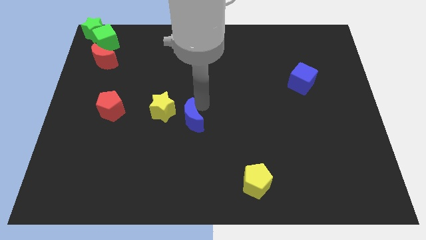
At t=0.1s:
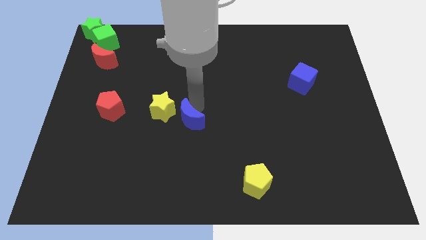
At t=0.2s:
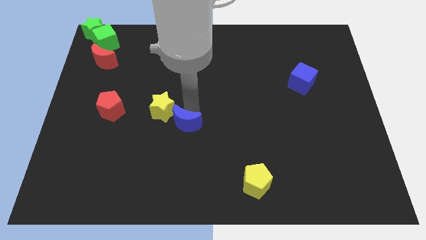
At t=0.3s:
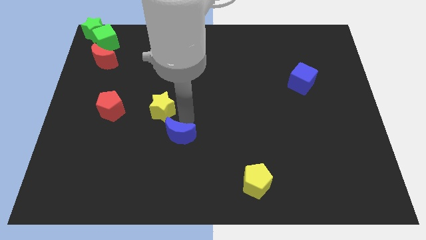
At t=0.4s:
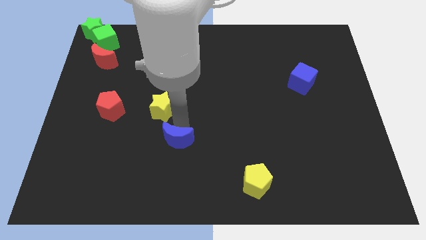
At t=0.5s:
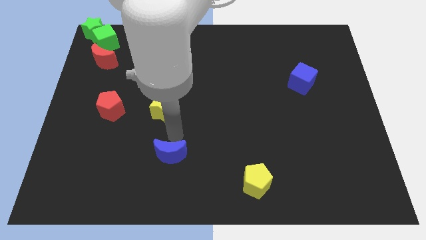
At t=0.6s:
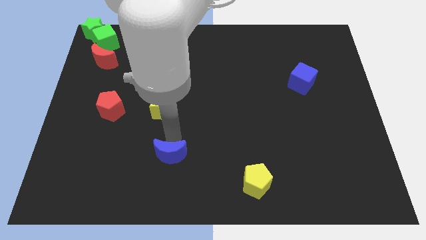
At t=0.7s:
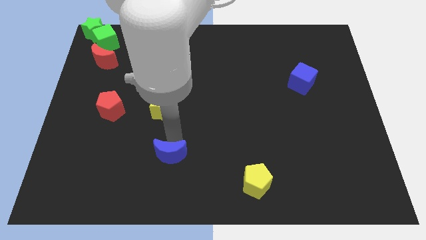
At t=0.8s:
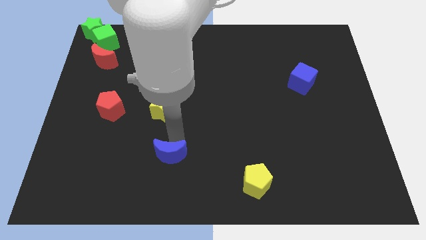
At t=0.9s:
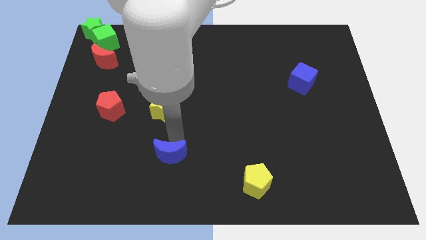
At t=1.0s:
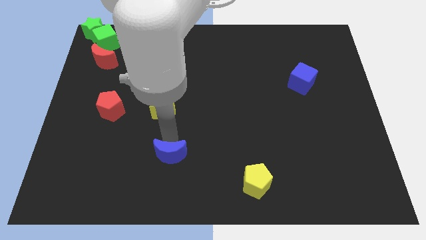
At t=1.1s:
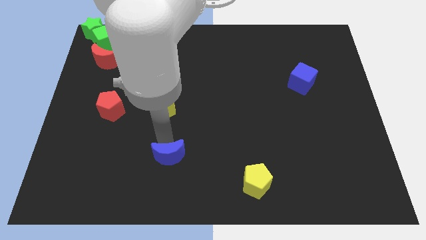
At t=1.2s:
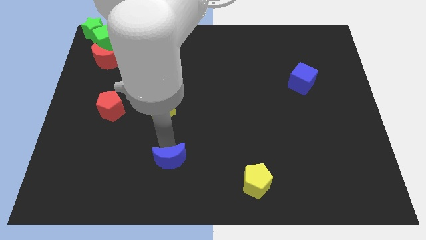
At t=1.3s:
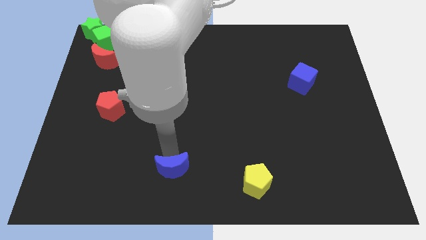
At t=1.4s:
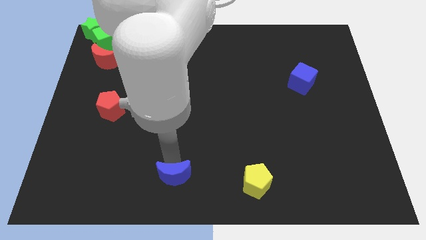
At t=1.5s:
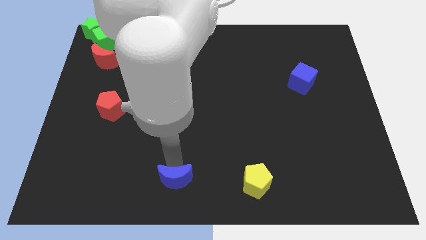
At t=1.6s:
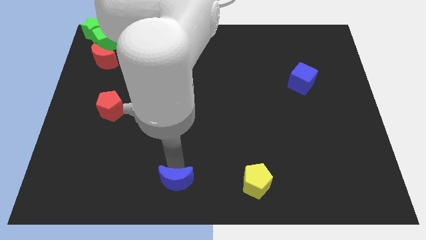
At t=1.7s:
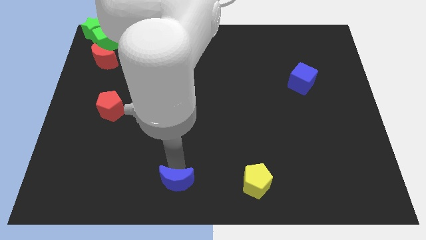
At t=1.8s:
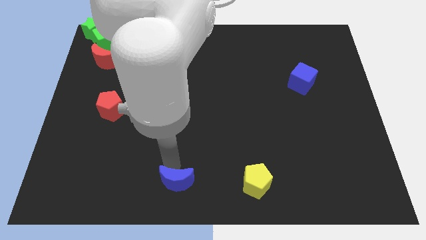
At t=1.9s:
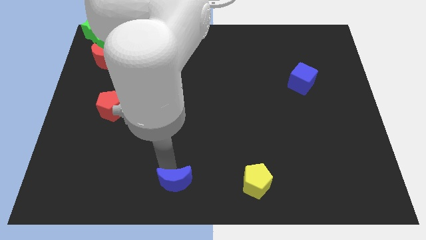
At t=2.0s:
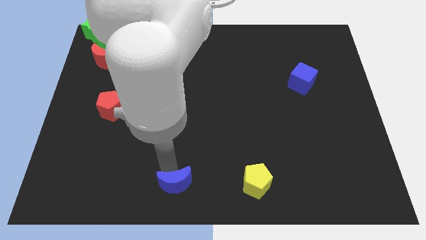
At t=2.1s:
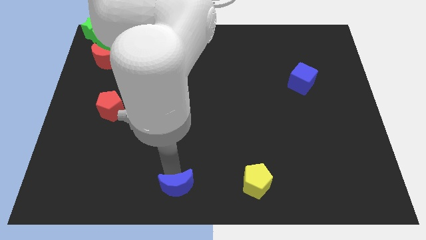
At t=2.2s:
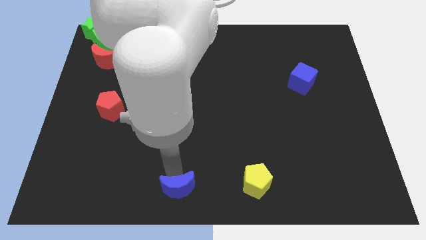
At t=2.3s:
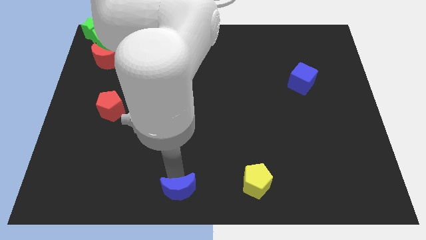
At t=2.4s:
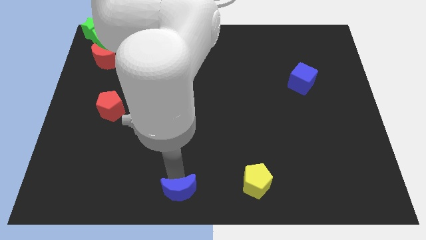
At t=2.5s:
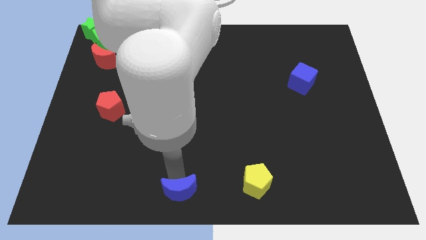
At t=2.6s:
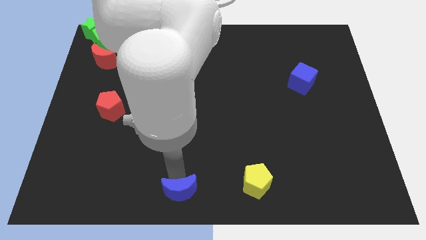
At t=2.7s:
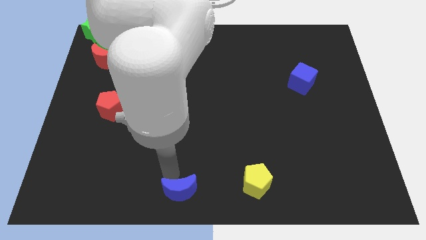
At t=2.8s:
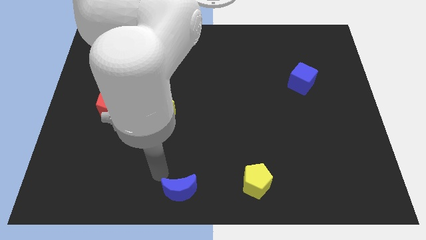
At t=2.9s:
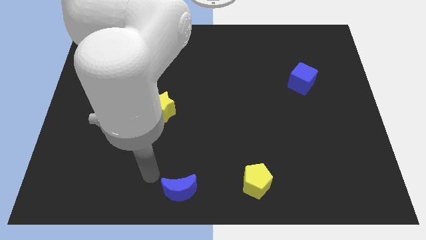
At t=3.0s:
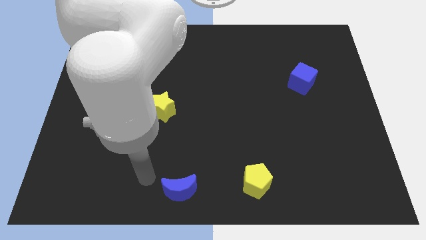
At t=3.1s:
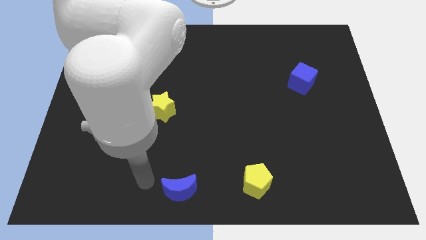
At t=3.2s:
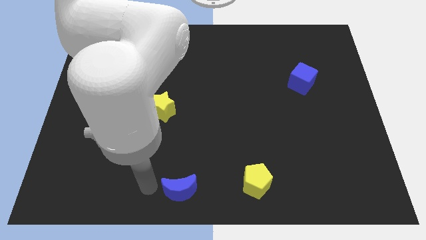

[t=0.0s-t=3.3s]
move the blue moon to the left of the blue cube

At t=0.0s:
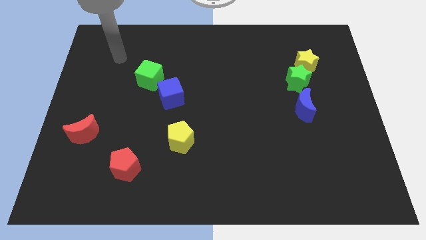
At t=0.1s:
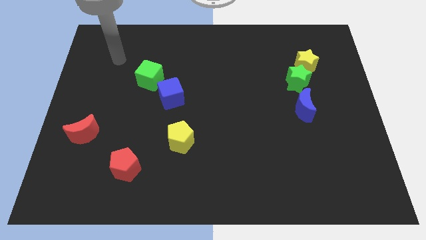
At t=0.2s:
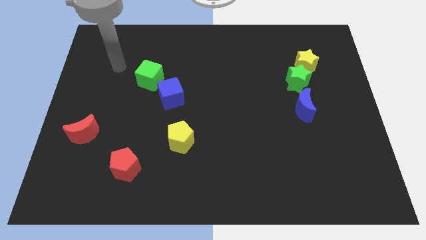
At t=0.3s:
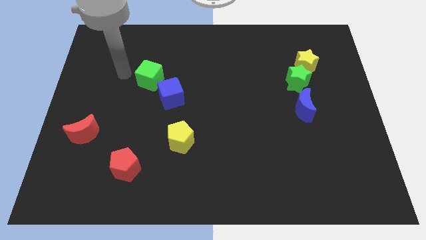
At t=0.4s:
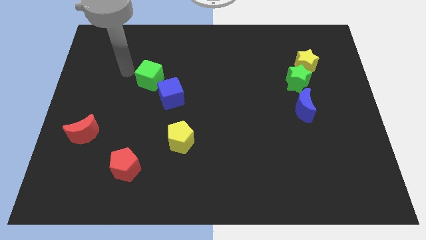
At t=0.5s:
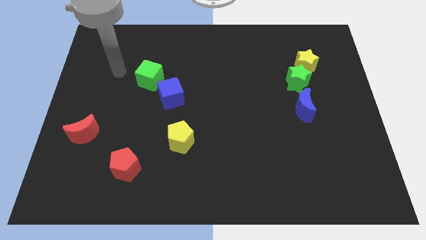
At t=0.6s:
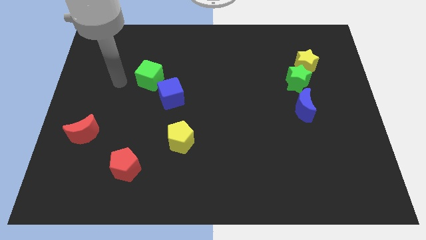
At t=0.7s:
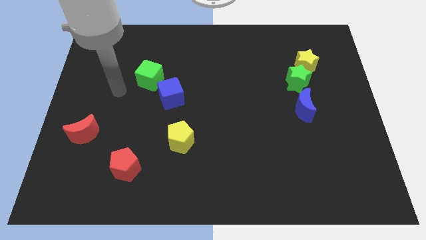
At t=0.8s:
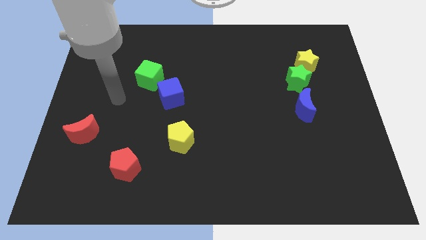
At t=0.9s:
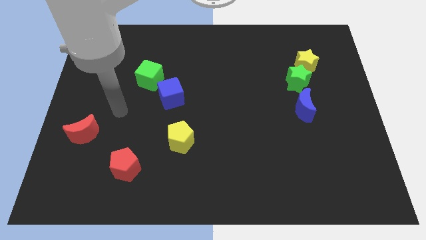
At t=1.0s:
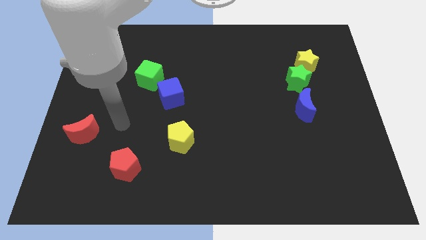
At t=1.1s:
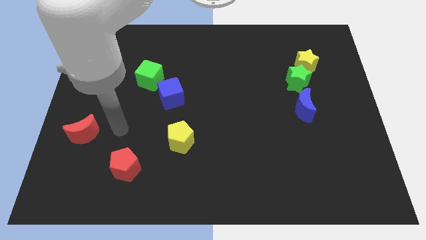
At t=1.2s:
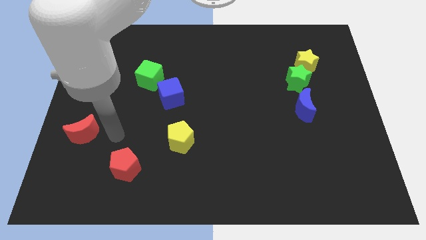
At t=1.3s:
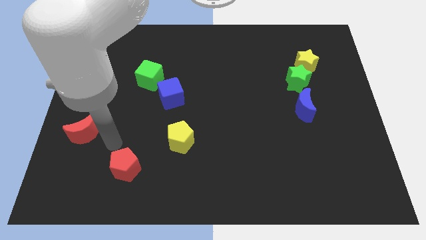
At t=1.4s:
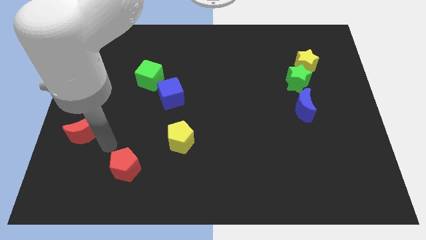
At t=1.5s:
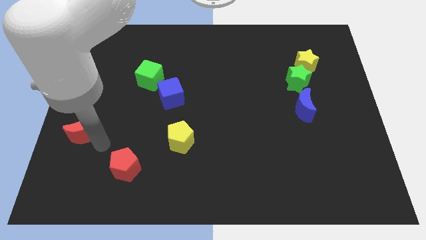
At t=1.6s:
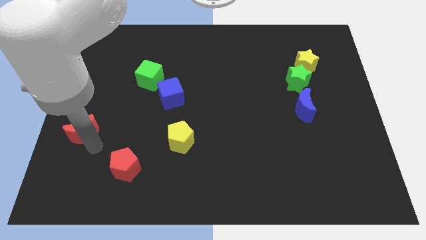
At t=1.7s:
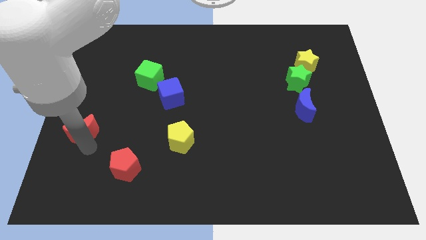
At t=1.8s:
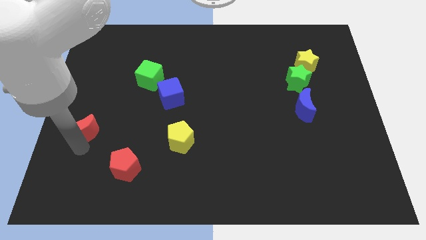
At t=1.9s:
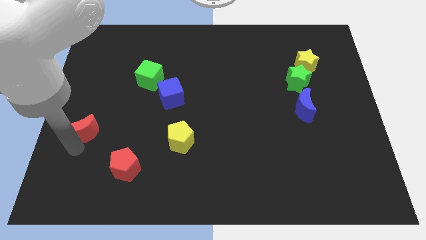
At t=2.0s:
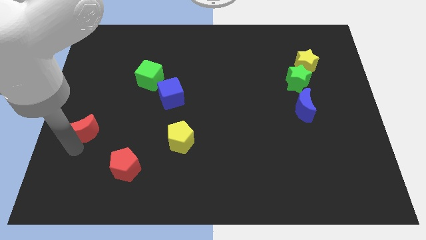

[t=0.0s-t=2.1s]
move your arm to the bottom of red crescent

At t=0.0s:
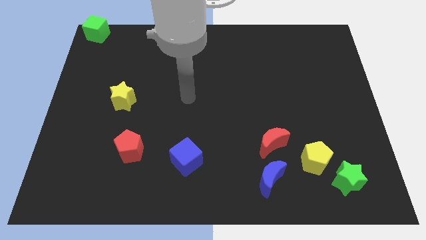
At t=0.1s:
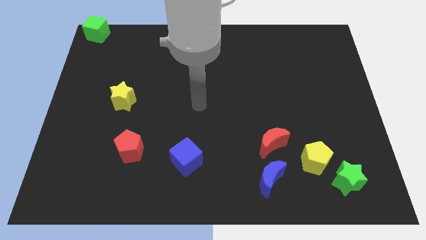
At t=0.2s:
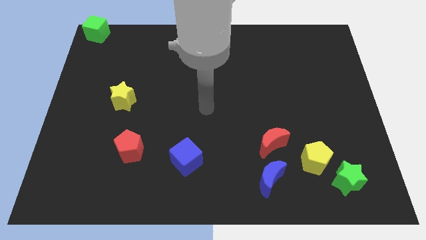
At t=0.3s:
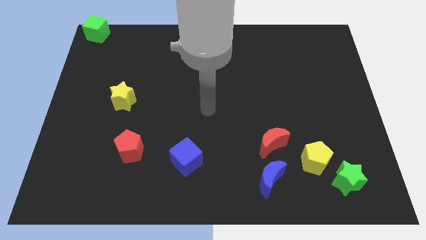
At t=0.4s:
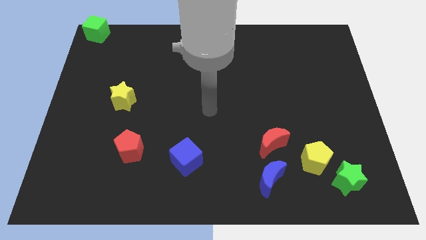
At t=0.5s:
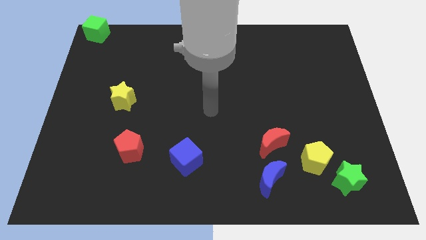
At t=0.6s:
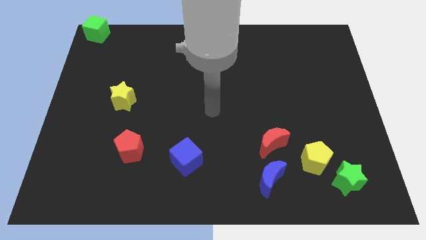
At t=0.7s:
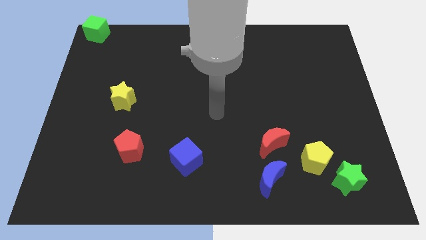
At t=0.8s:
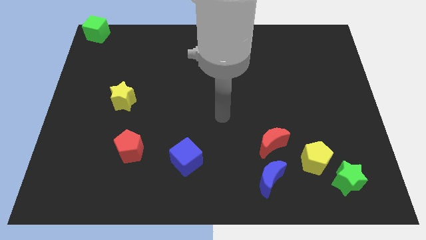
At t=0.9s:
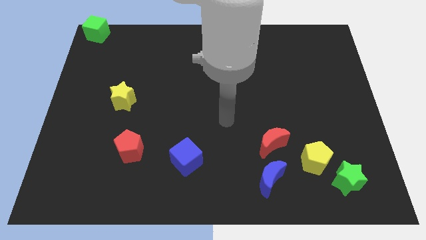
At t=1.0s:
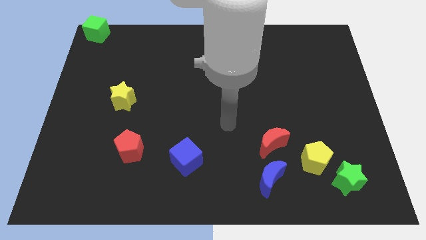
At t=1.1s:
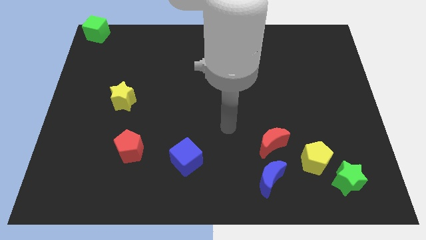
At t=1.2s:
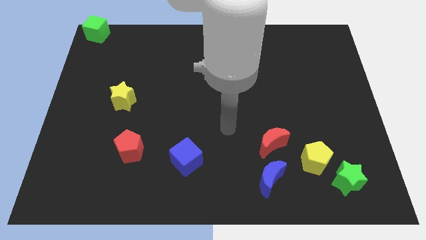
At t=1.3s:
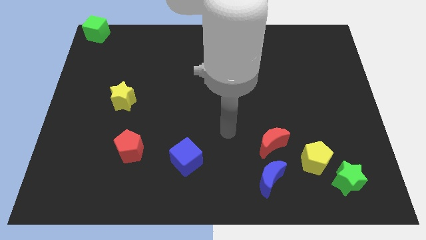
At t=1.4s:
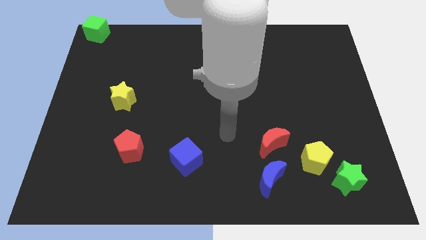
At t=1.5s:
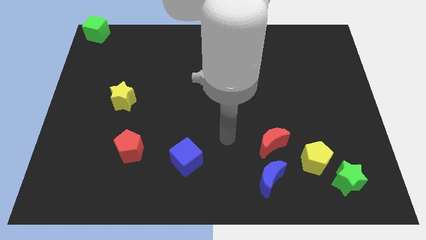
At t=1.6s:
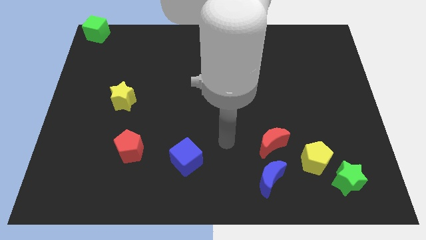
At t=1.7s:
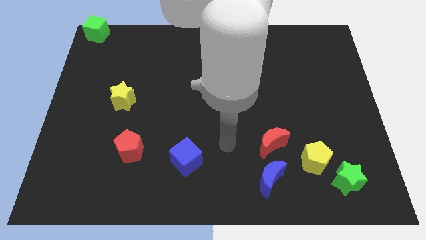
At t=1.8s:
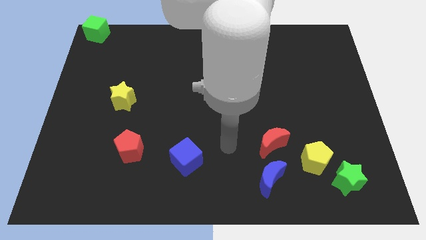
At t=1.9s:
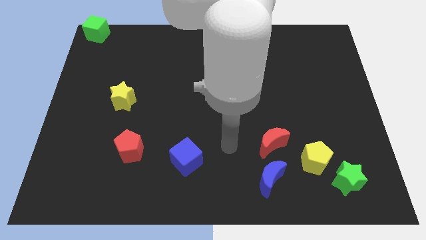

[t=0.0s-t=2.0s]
drag the pointer to the left of the red moon

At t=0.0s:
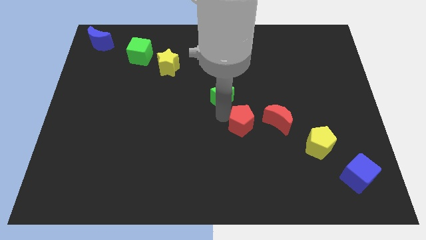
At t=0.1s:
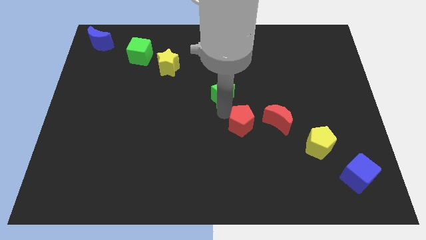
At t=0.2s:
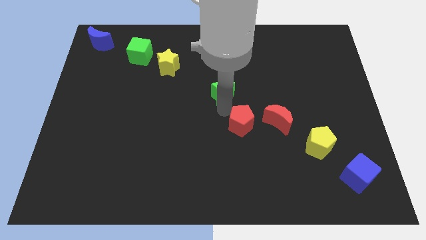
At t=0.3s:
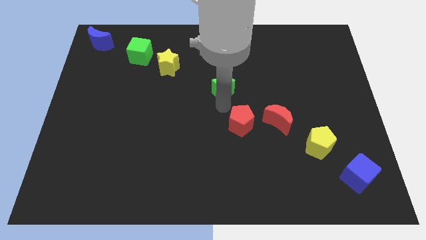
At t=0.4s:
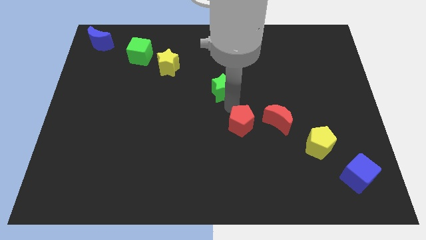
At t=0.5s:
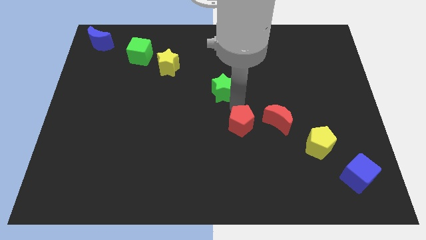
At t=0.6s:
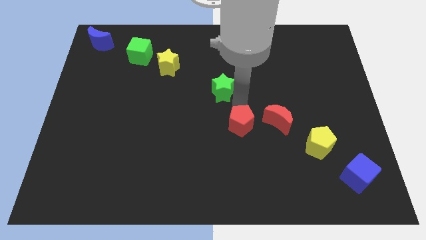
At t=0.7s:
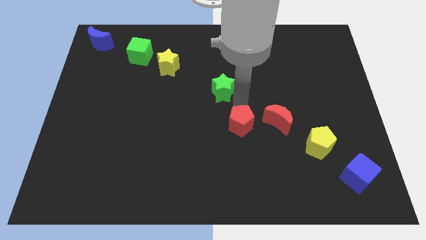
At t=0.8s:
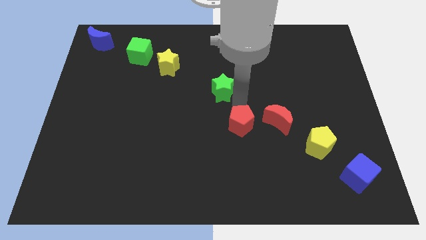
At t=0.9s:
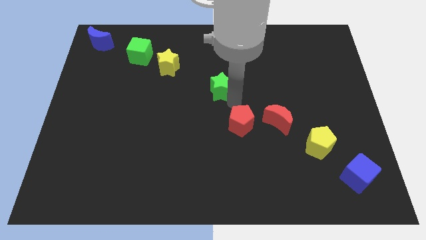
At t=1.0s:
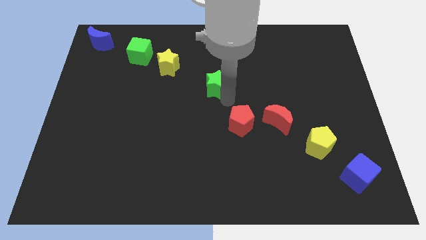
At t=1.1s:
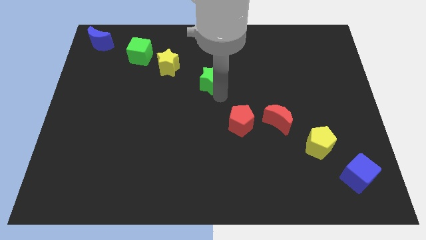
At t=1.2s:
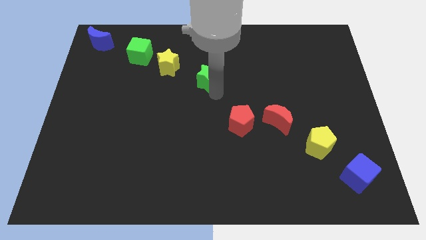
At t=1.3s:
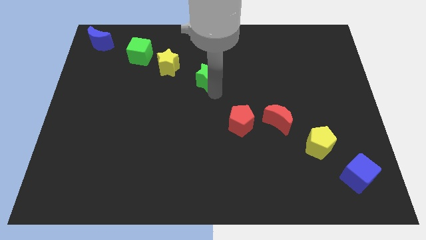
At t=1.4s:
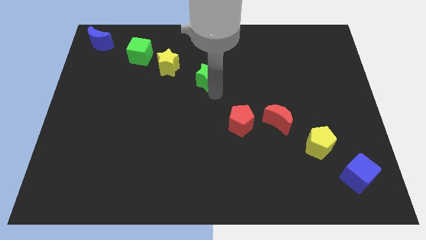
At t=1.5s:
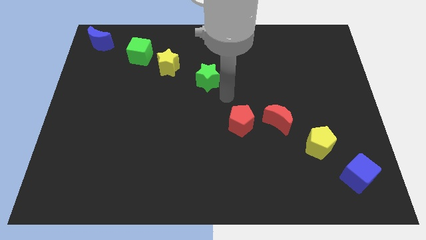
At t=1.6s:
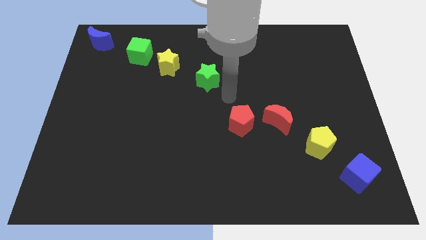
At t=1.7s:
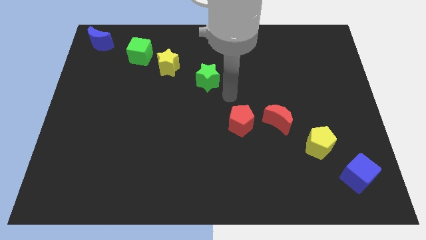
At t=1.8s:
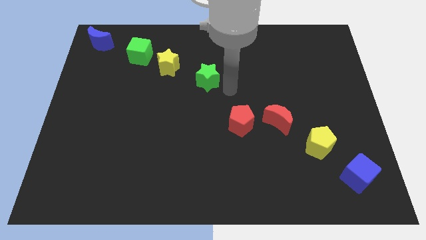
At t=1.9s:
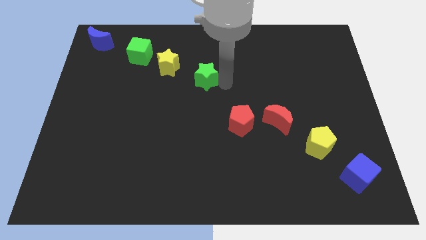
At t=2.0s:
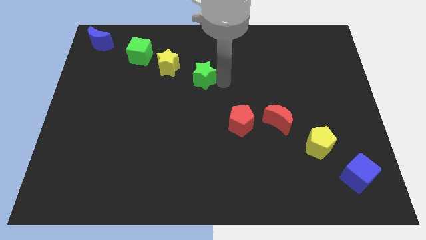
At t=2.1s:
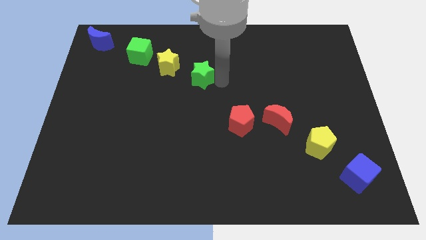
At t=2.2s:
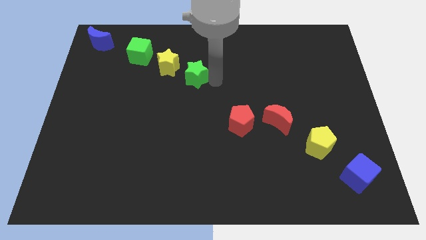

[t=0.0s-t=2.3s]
place green star to the right side of the yellow block
